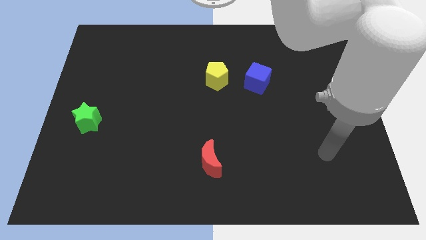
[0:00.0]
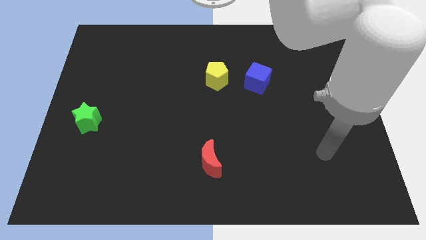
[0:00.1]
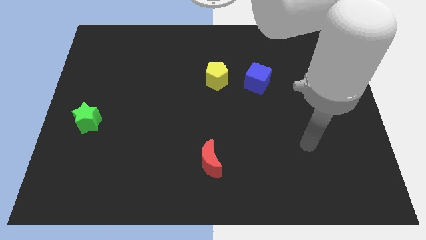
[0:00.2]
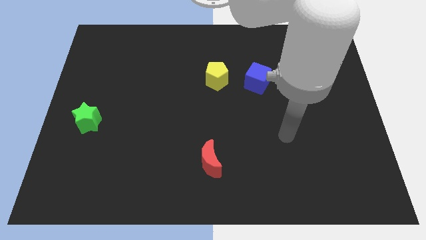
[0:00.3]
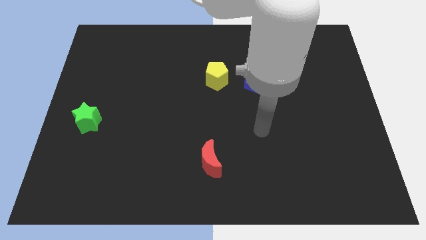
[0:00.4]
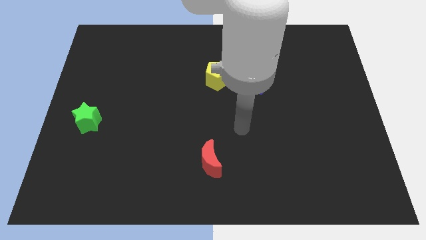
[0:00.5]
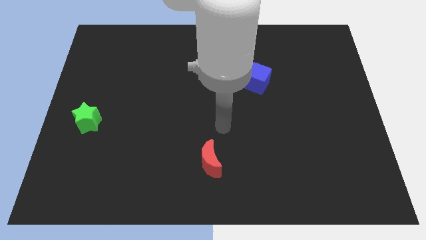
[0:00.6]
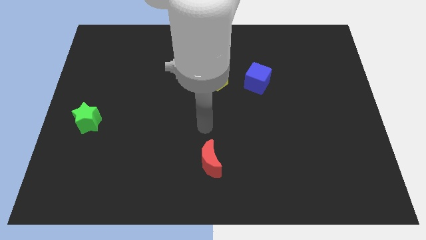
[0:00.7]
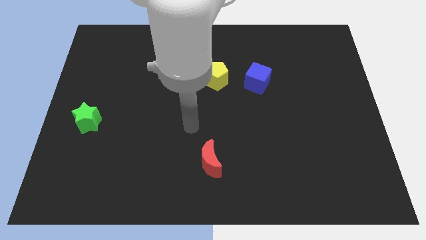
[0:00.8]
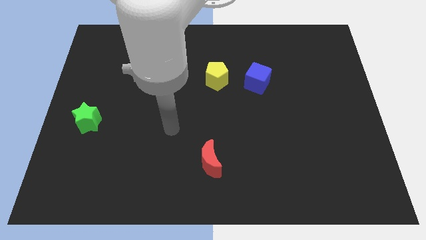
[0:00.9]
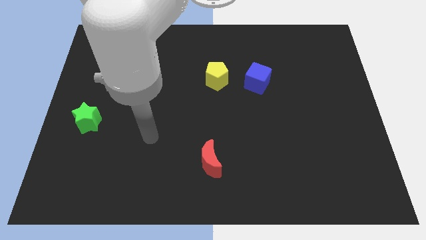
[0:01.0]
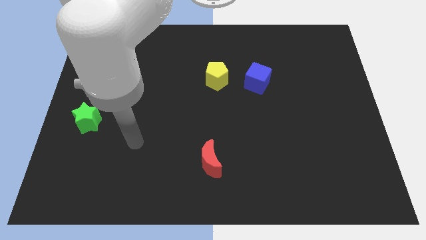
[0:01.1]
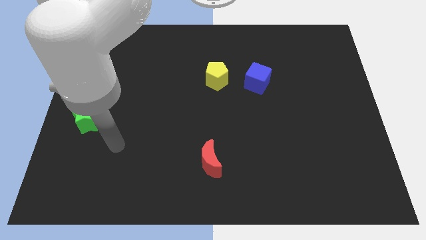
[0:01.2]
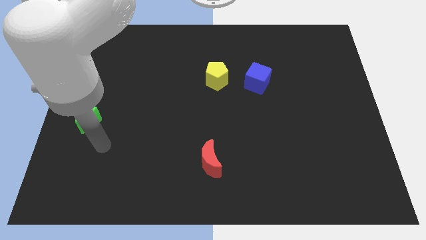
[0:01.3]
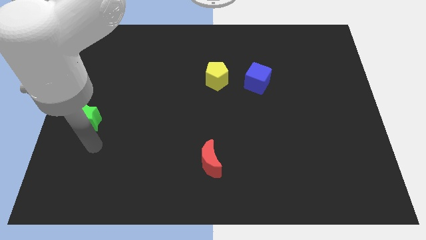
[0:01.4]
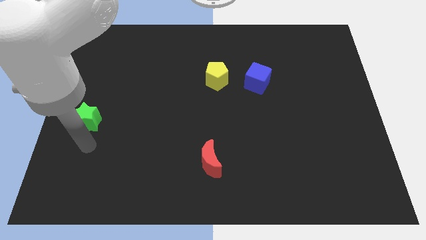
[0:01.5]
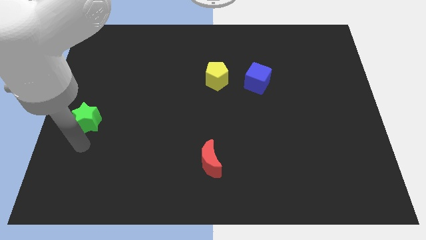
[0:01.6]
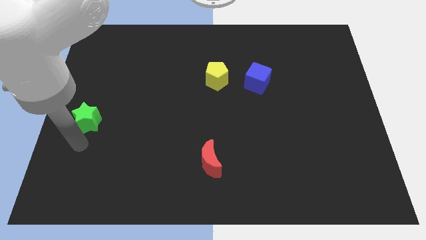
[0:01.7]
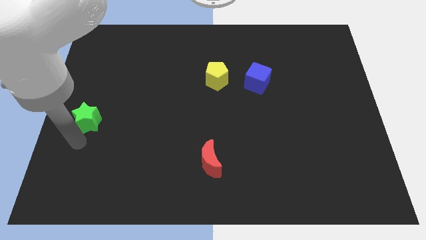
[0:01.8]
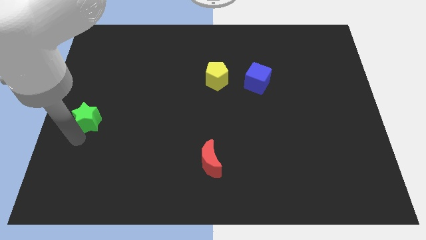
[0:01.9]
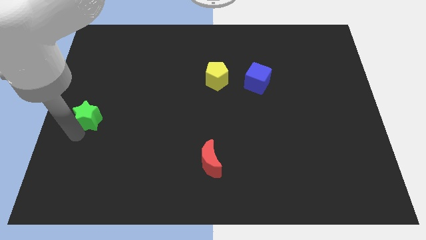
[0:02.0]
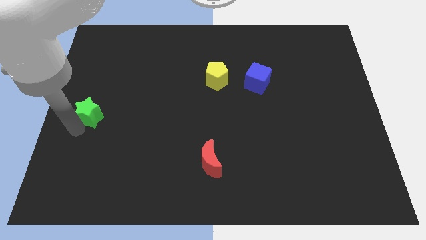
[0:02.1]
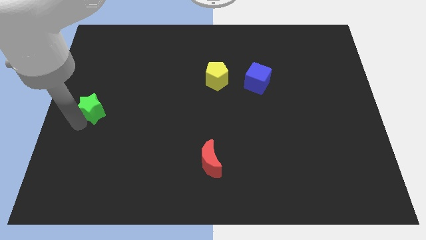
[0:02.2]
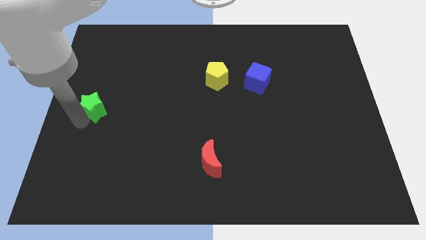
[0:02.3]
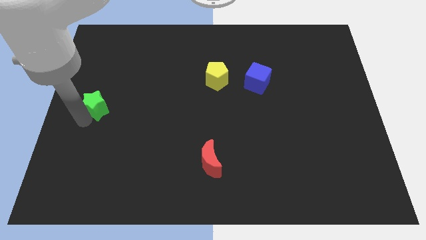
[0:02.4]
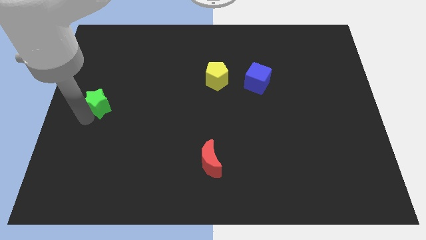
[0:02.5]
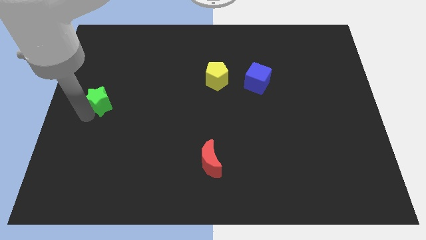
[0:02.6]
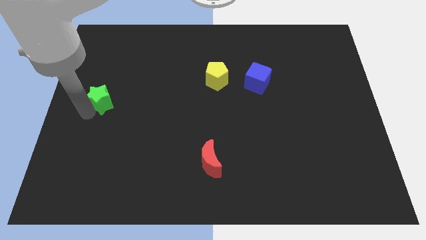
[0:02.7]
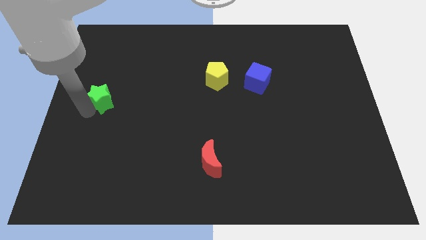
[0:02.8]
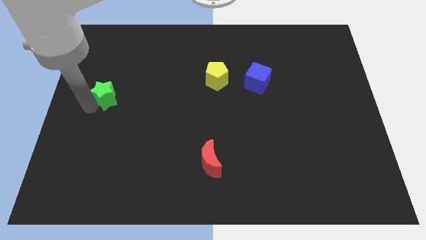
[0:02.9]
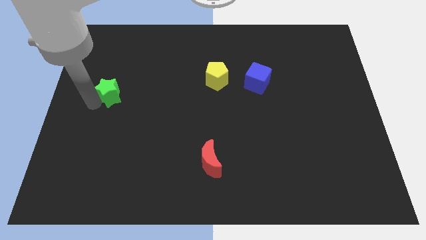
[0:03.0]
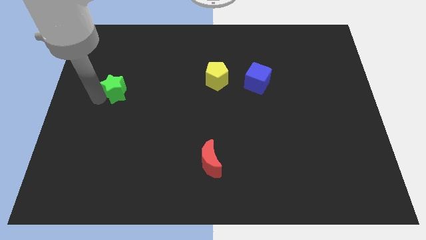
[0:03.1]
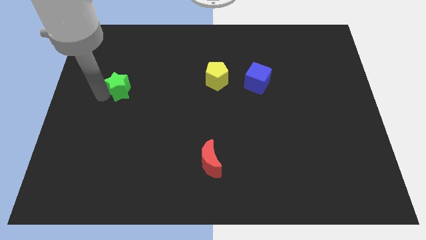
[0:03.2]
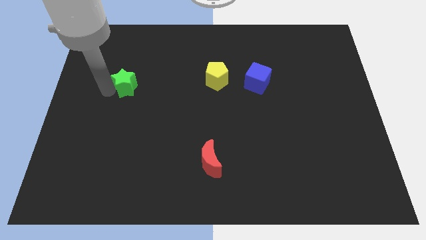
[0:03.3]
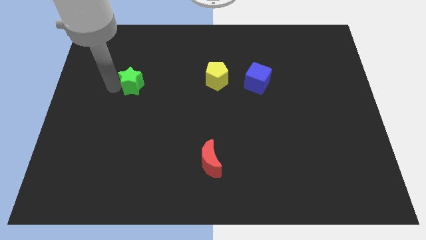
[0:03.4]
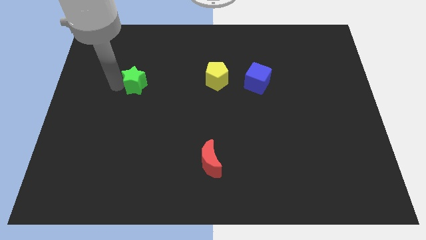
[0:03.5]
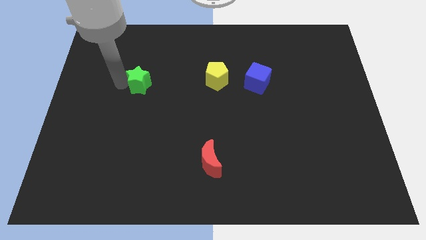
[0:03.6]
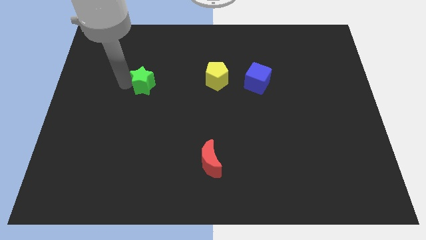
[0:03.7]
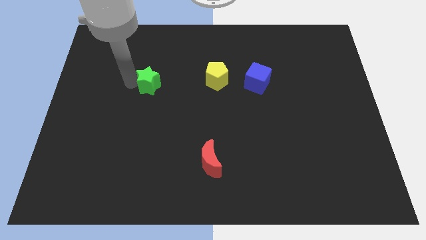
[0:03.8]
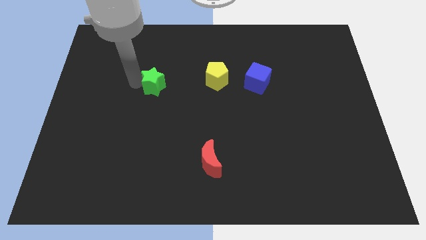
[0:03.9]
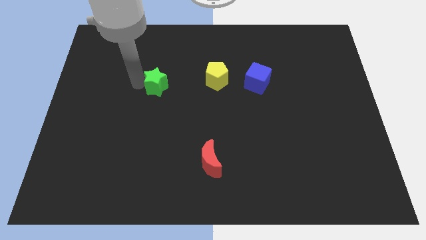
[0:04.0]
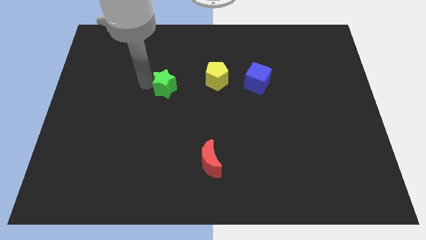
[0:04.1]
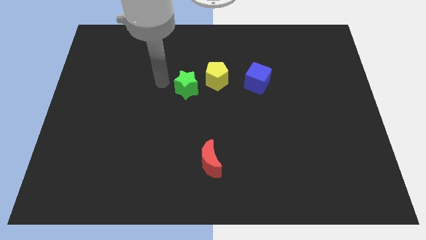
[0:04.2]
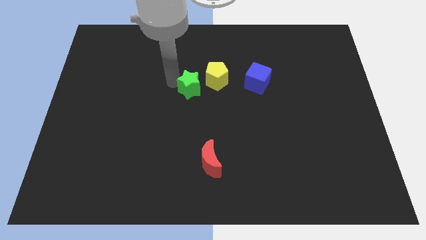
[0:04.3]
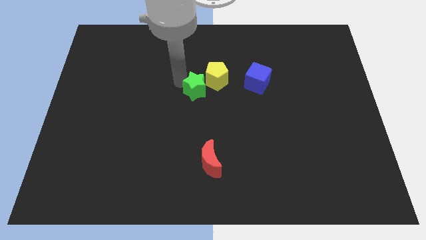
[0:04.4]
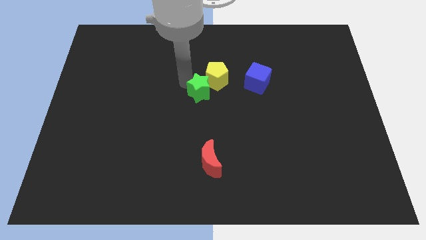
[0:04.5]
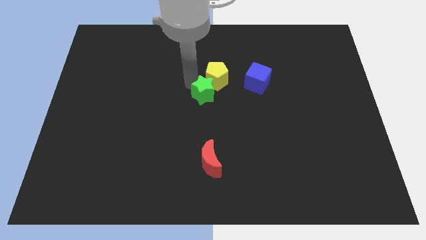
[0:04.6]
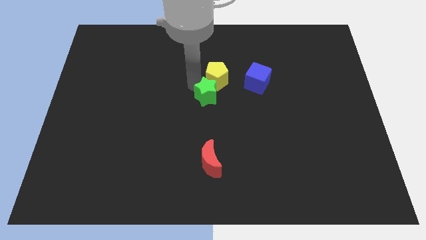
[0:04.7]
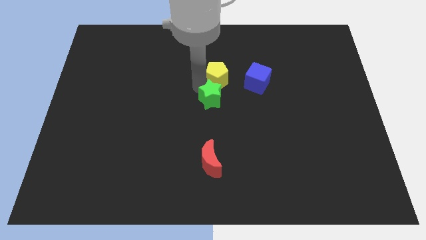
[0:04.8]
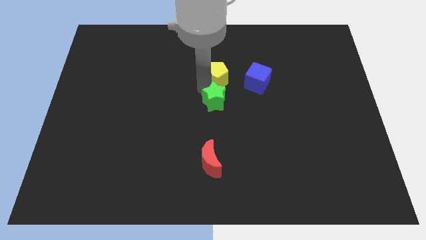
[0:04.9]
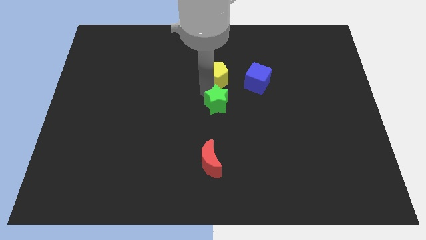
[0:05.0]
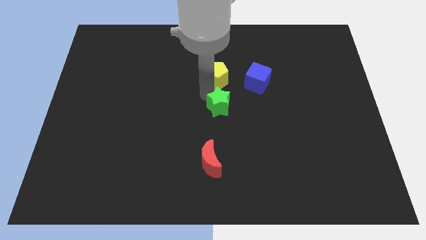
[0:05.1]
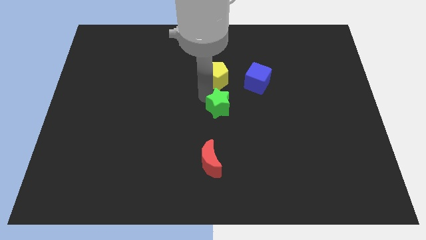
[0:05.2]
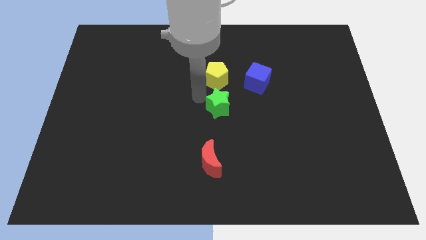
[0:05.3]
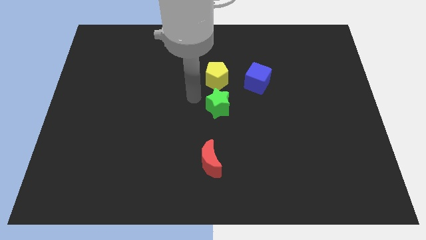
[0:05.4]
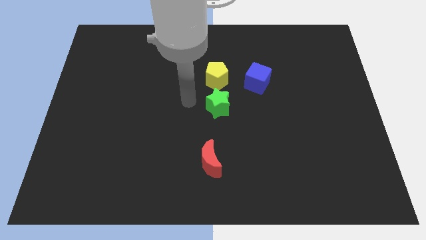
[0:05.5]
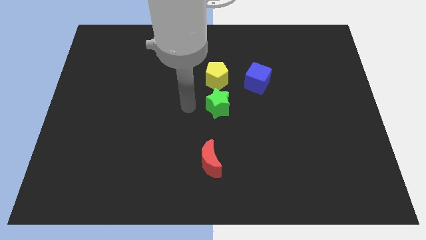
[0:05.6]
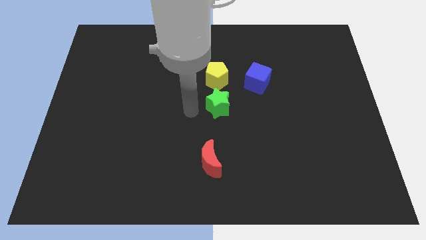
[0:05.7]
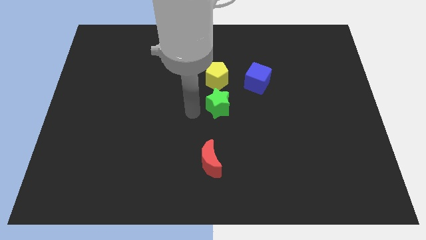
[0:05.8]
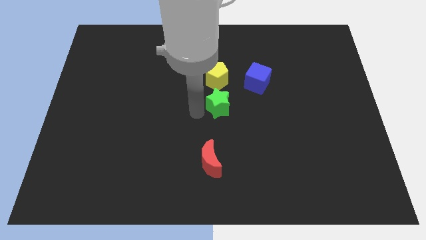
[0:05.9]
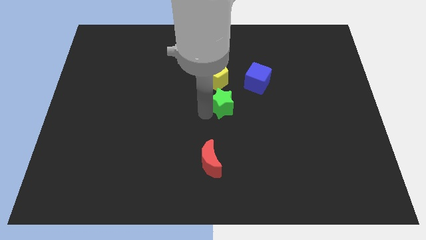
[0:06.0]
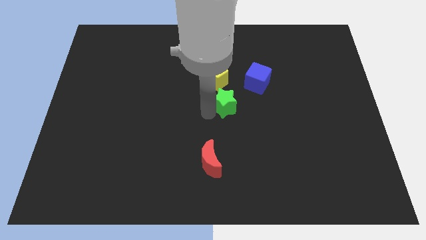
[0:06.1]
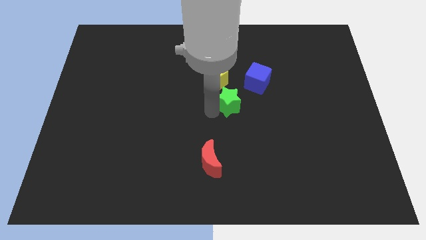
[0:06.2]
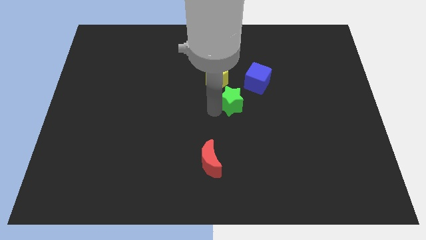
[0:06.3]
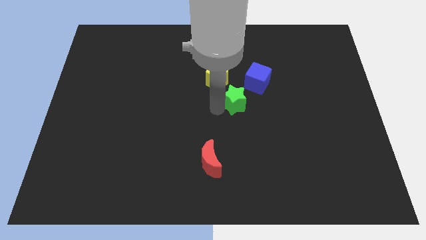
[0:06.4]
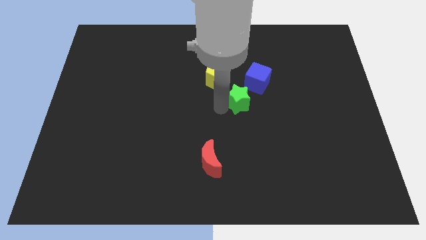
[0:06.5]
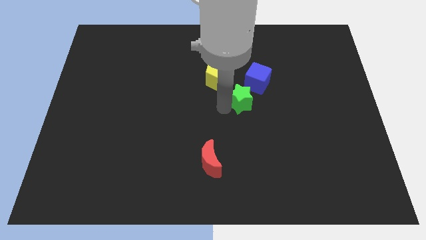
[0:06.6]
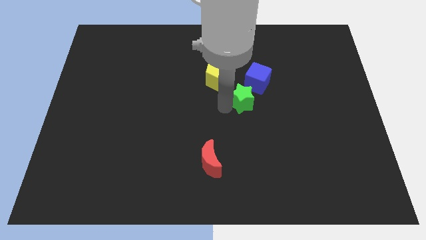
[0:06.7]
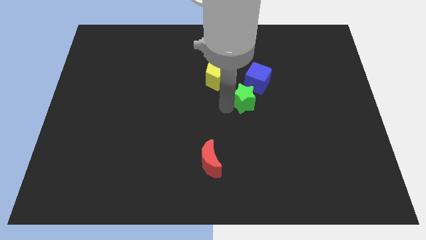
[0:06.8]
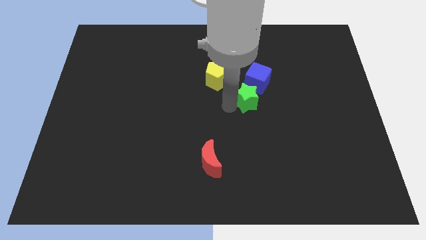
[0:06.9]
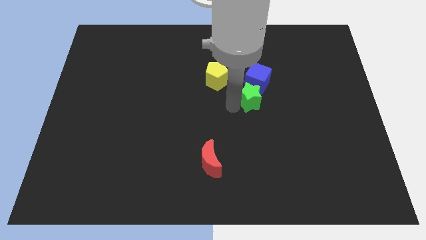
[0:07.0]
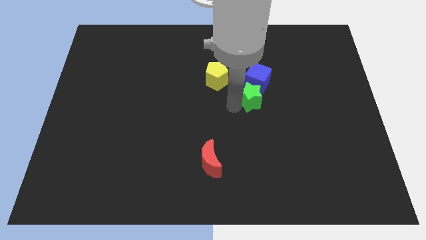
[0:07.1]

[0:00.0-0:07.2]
put the green star towards the cube

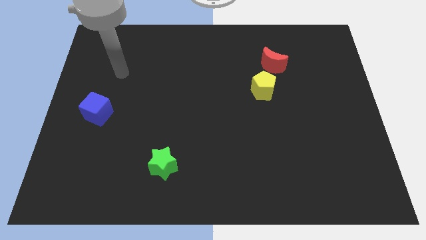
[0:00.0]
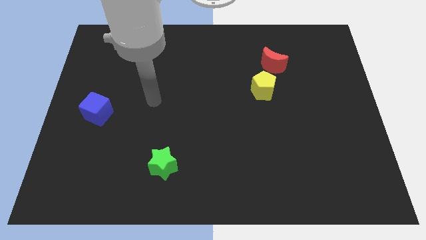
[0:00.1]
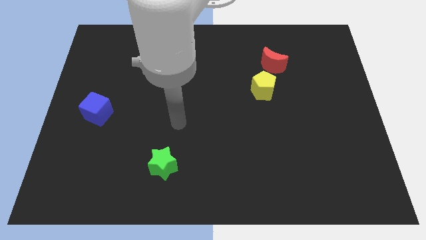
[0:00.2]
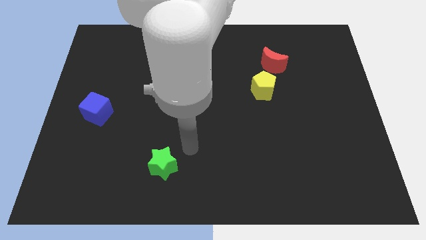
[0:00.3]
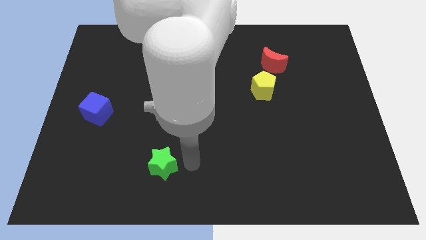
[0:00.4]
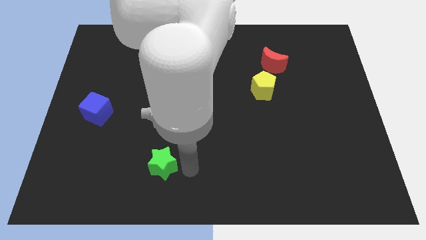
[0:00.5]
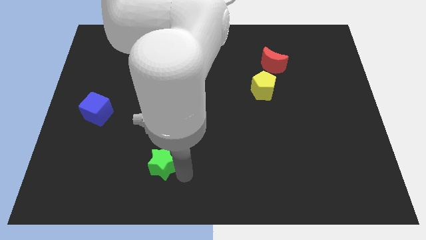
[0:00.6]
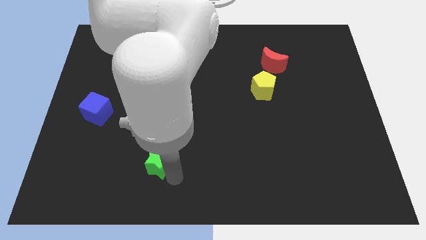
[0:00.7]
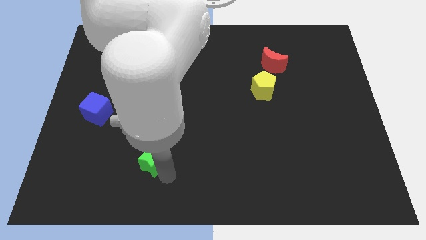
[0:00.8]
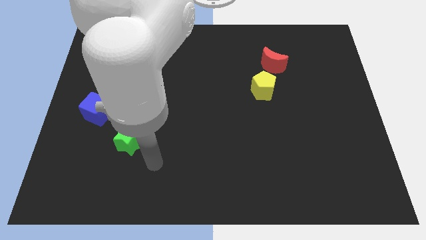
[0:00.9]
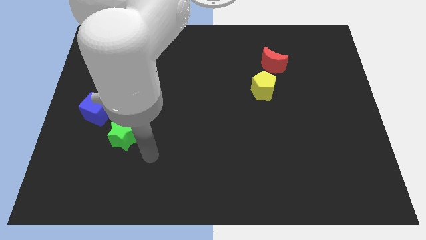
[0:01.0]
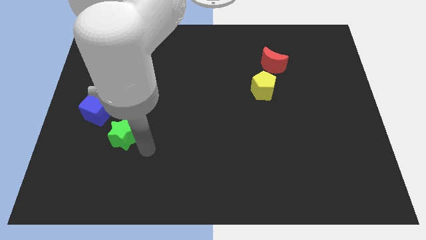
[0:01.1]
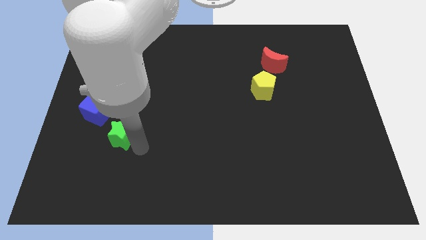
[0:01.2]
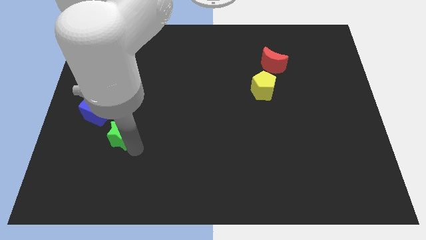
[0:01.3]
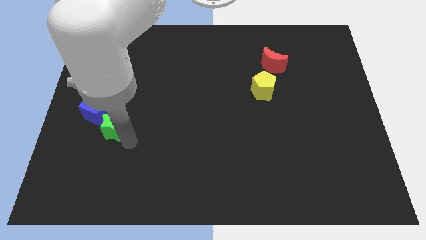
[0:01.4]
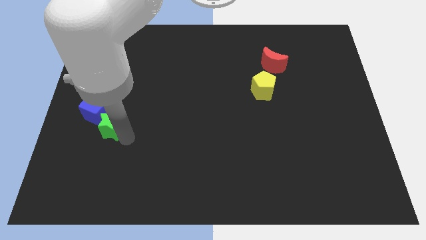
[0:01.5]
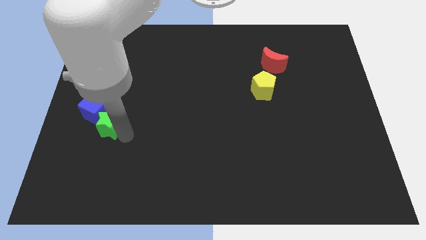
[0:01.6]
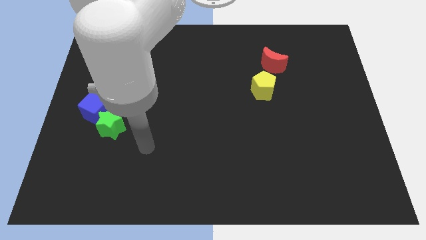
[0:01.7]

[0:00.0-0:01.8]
put the green block towards the blue cube

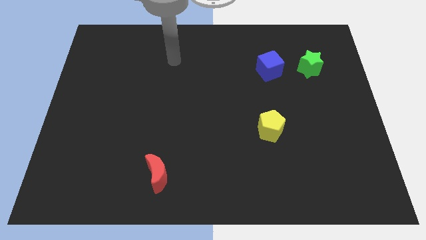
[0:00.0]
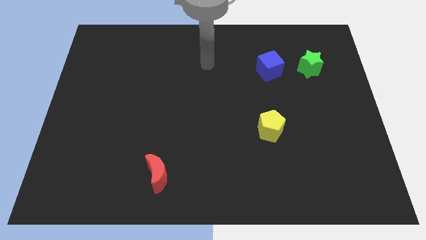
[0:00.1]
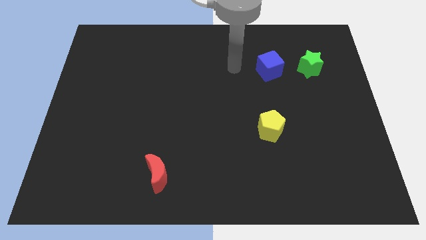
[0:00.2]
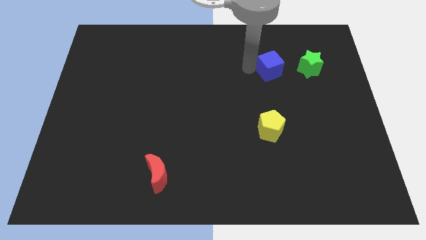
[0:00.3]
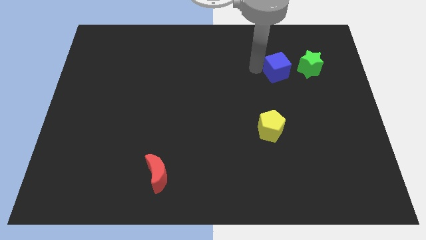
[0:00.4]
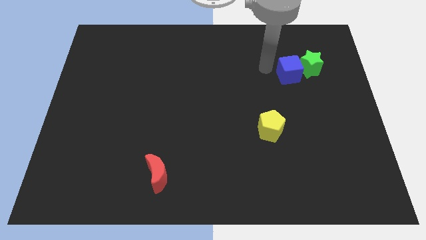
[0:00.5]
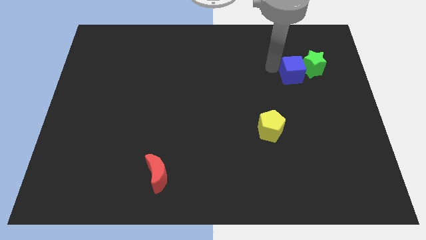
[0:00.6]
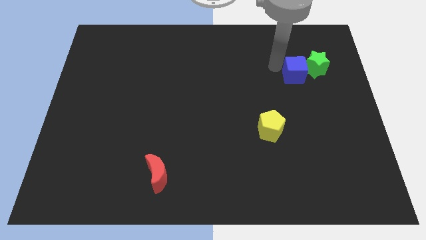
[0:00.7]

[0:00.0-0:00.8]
move the cube towards the green block
